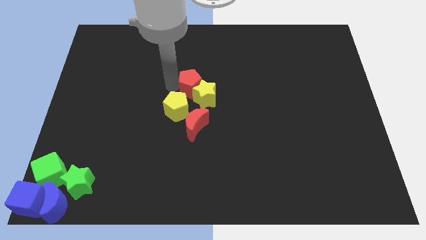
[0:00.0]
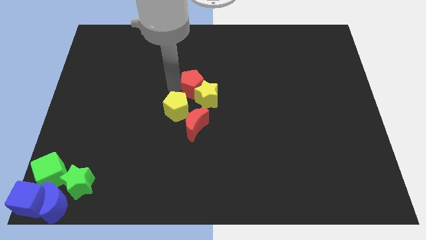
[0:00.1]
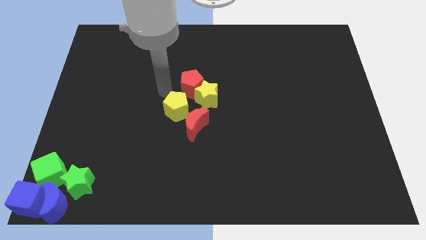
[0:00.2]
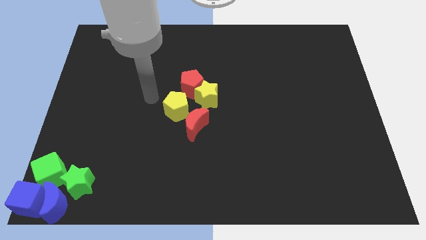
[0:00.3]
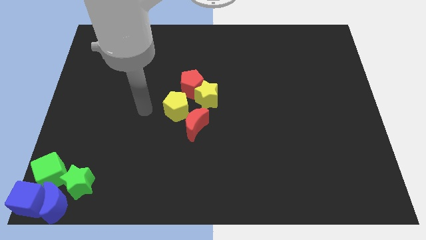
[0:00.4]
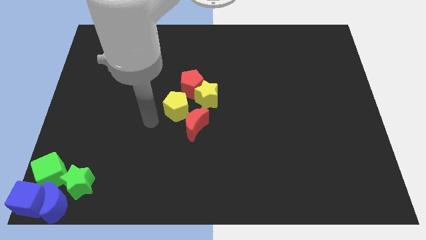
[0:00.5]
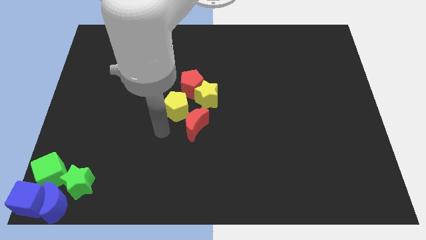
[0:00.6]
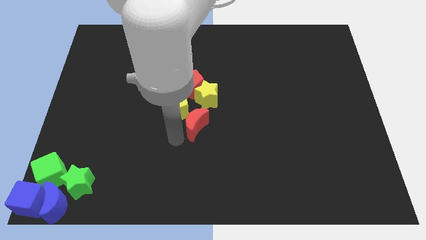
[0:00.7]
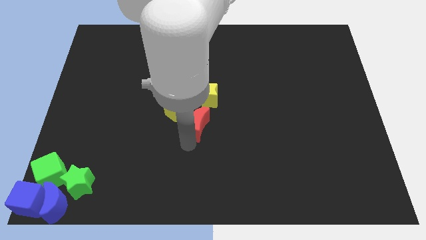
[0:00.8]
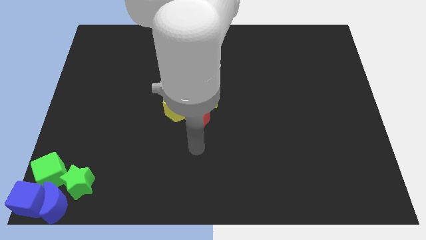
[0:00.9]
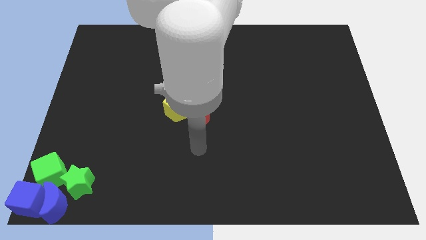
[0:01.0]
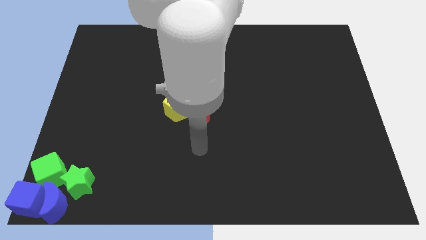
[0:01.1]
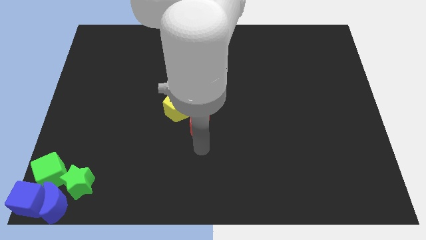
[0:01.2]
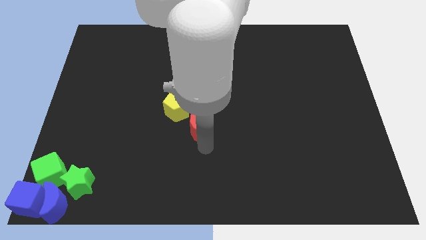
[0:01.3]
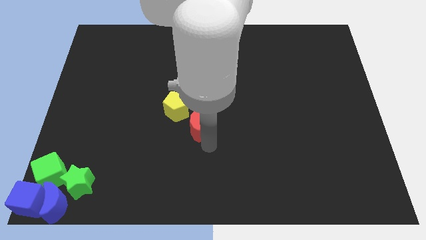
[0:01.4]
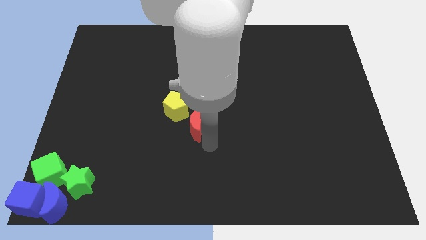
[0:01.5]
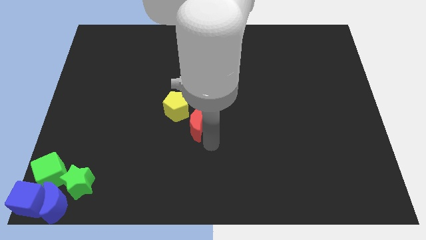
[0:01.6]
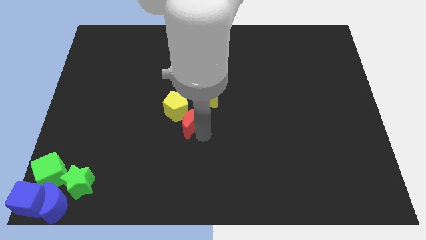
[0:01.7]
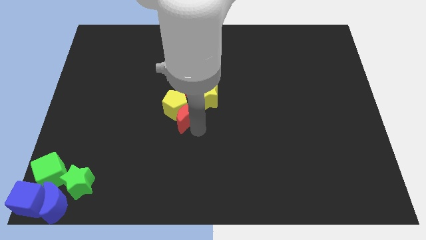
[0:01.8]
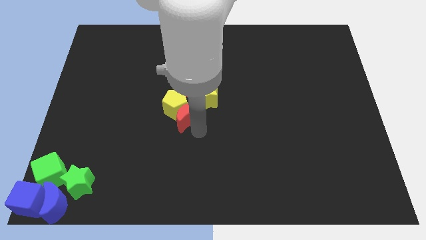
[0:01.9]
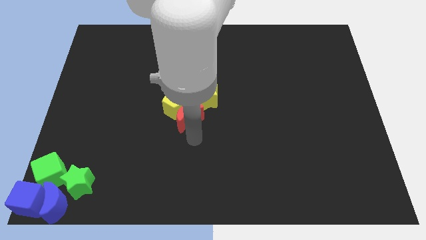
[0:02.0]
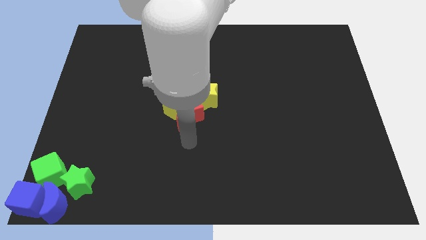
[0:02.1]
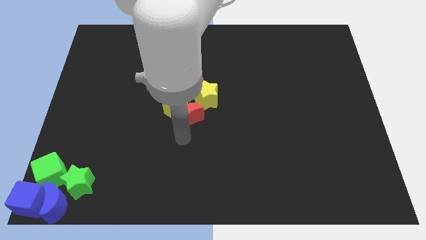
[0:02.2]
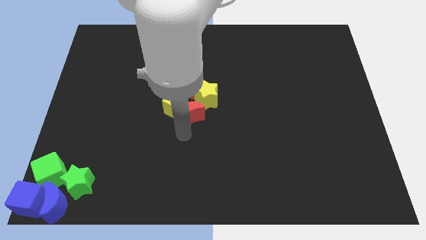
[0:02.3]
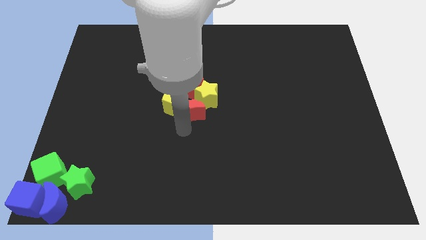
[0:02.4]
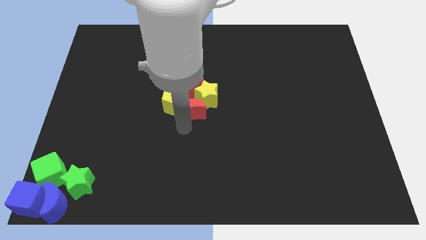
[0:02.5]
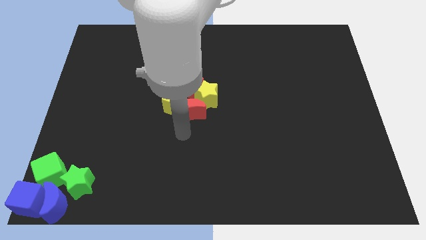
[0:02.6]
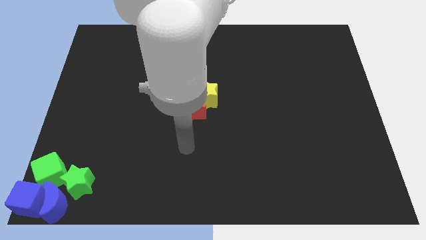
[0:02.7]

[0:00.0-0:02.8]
move group of blocks to the center

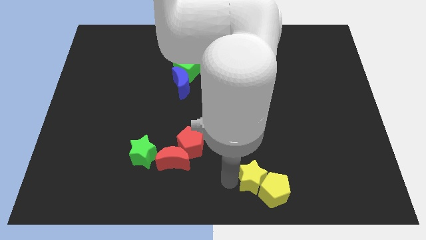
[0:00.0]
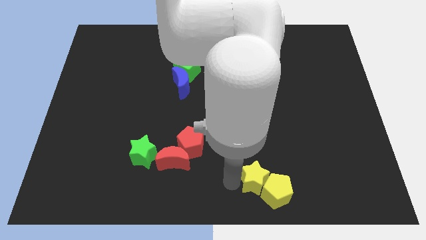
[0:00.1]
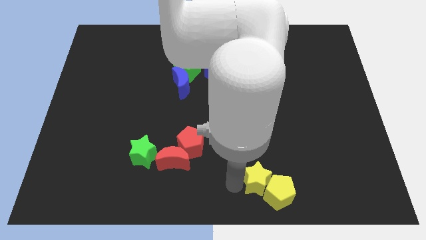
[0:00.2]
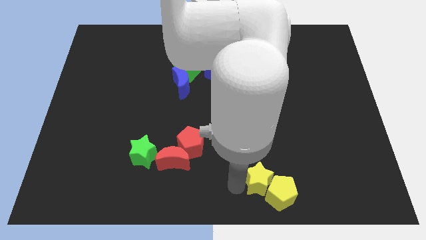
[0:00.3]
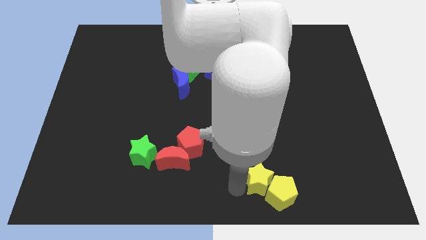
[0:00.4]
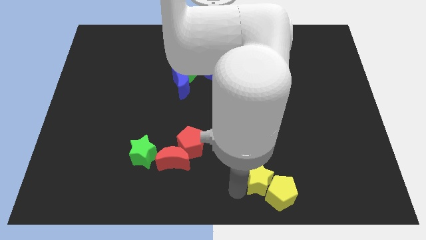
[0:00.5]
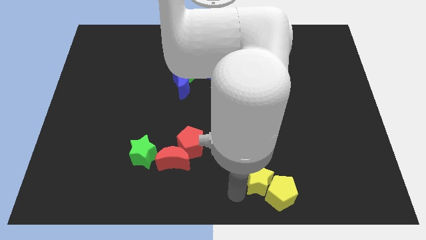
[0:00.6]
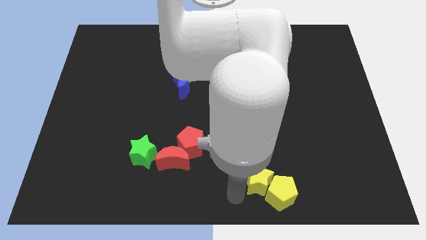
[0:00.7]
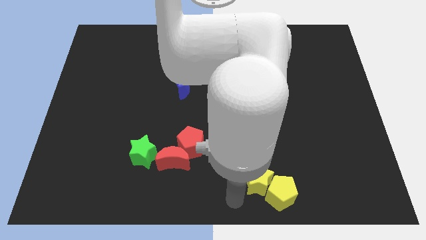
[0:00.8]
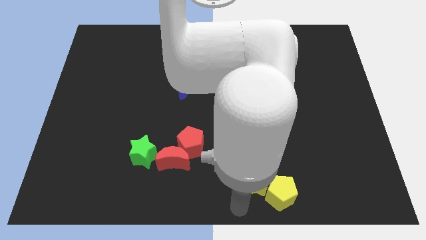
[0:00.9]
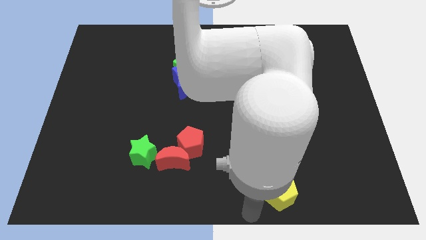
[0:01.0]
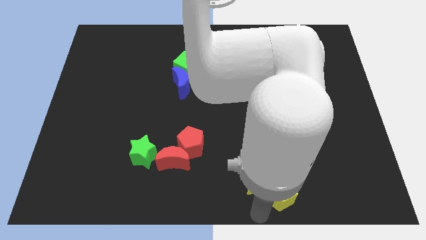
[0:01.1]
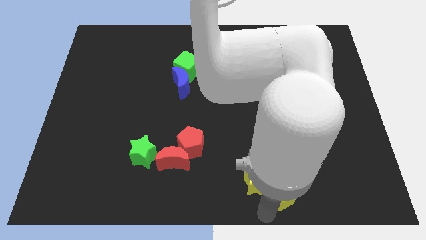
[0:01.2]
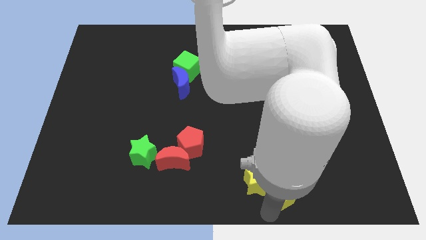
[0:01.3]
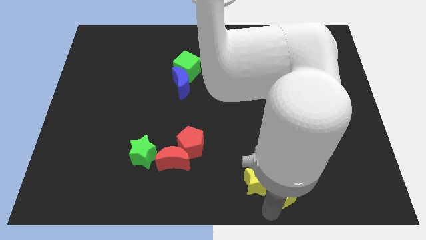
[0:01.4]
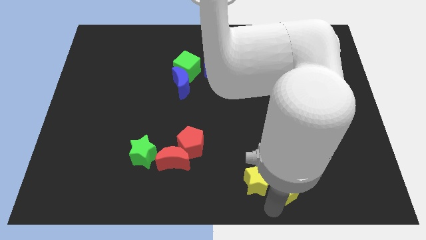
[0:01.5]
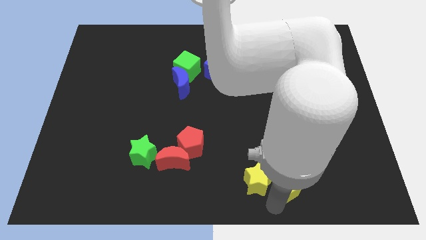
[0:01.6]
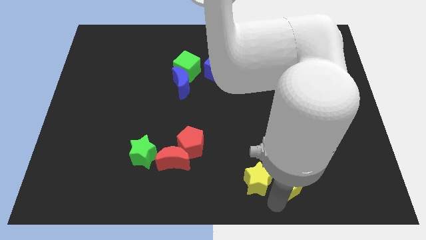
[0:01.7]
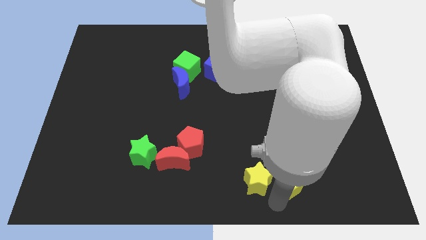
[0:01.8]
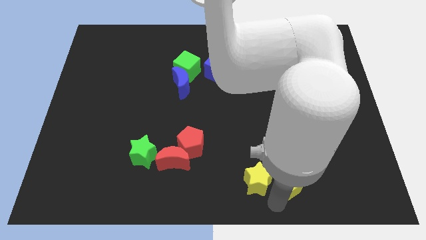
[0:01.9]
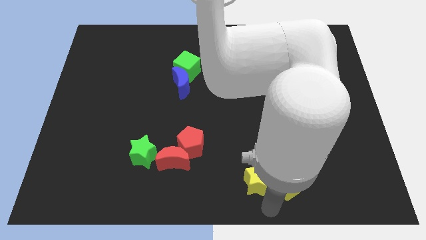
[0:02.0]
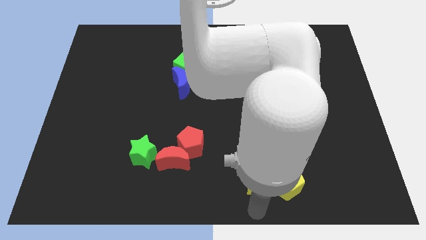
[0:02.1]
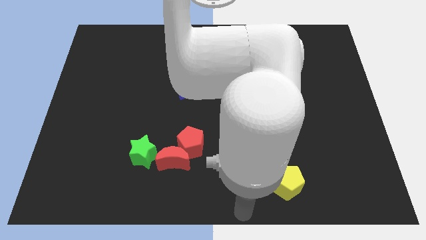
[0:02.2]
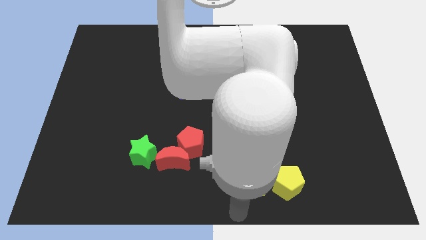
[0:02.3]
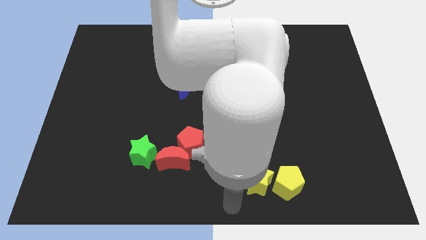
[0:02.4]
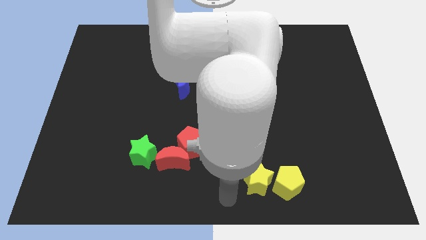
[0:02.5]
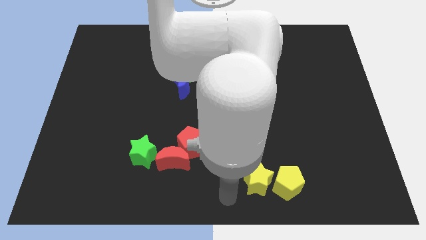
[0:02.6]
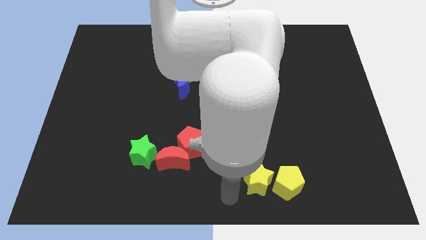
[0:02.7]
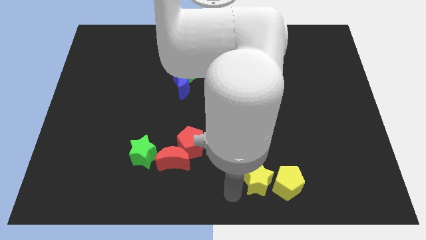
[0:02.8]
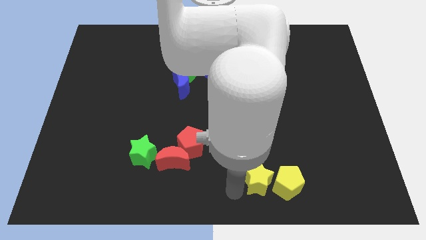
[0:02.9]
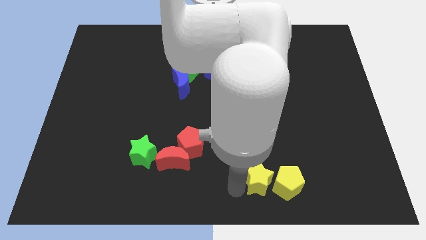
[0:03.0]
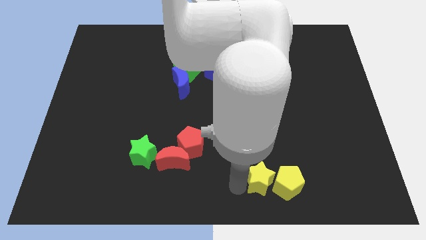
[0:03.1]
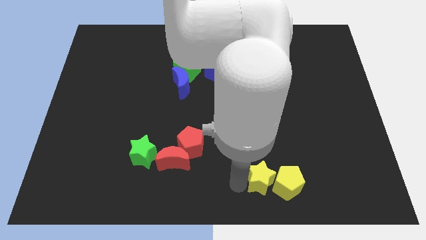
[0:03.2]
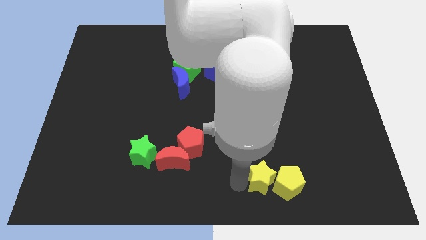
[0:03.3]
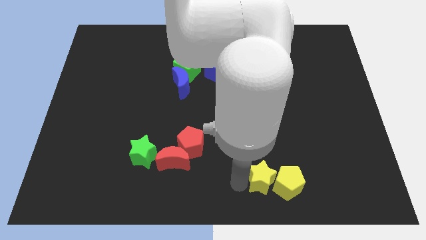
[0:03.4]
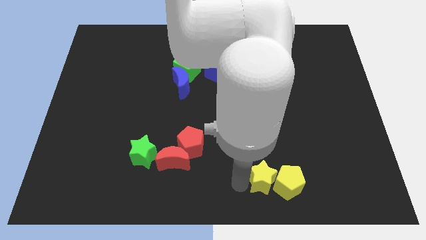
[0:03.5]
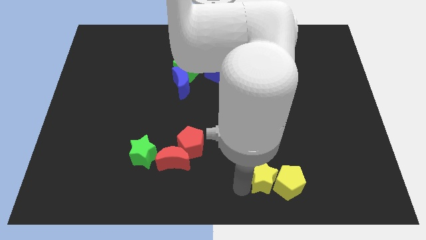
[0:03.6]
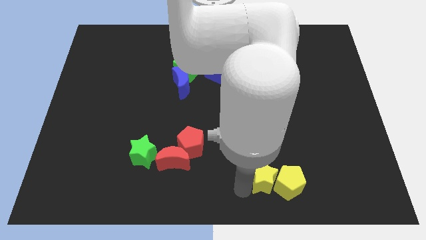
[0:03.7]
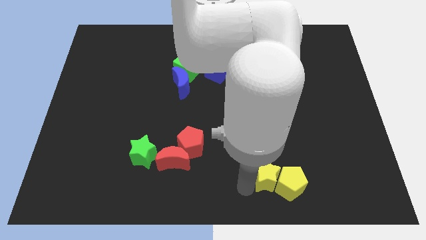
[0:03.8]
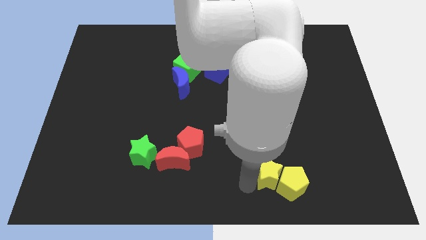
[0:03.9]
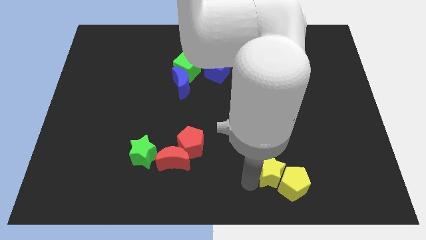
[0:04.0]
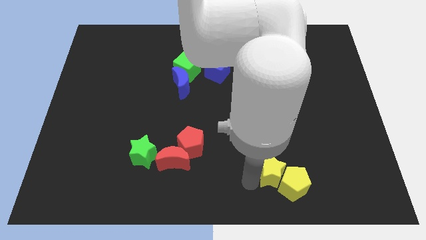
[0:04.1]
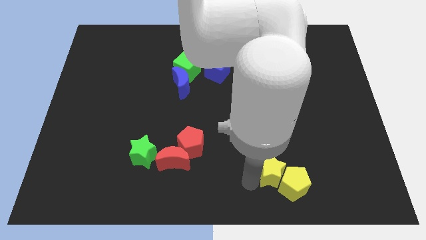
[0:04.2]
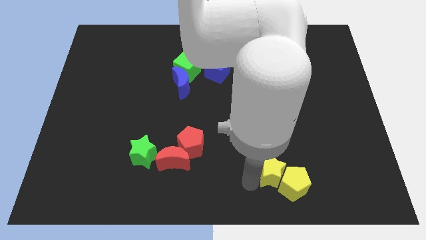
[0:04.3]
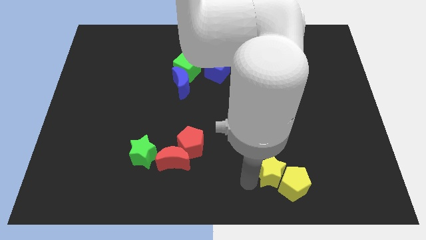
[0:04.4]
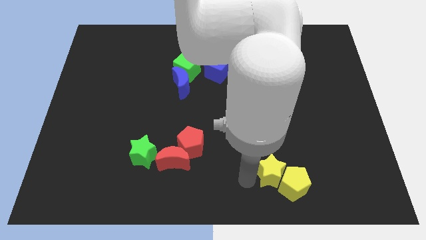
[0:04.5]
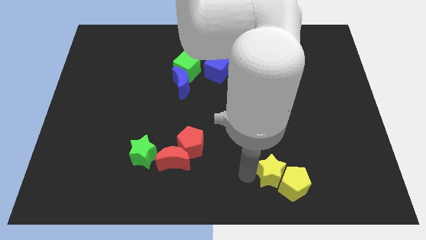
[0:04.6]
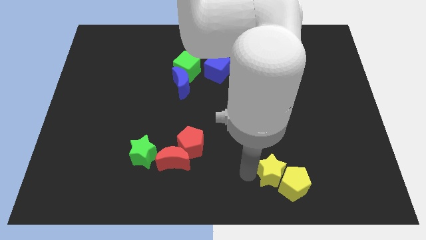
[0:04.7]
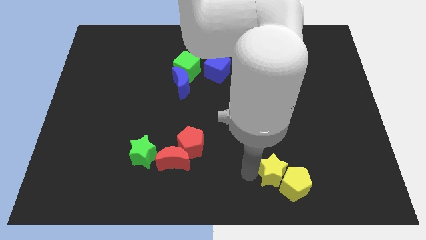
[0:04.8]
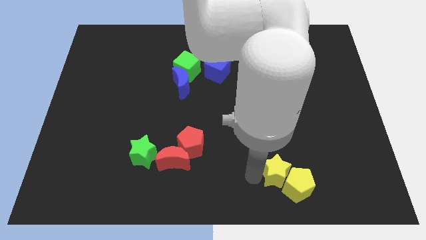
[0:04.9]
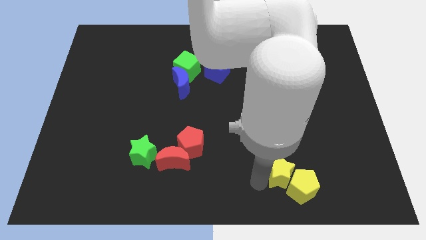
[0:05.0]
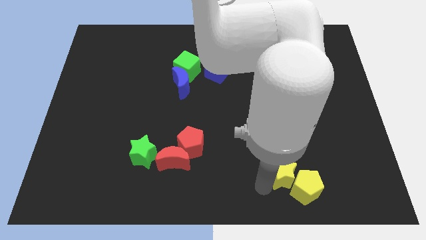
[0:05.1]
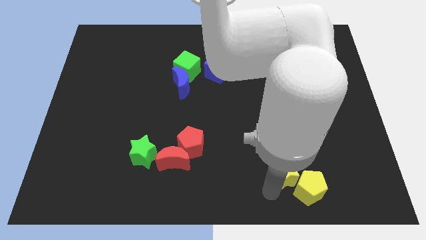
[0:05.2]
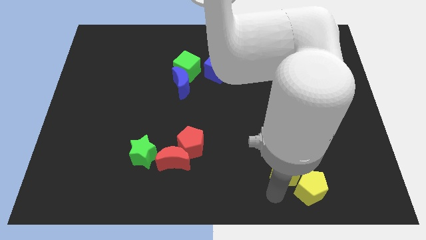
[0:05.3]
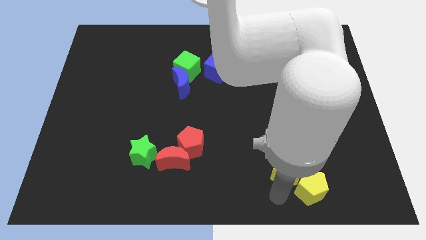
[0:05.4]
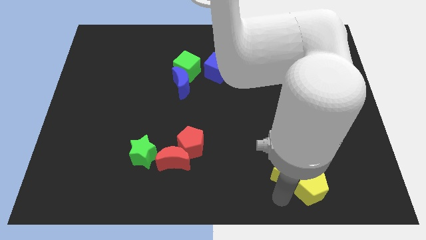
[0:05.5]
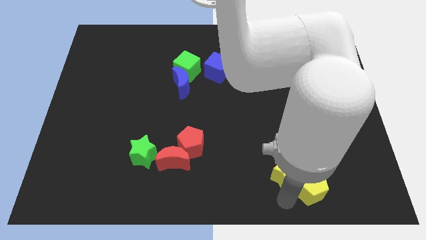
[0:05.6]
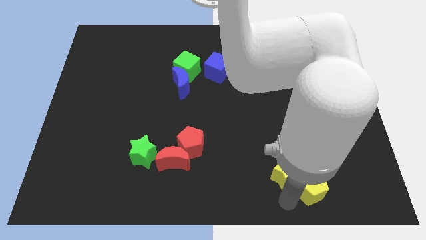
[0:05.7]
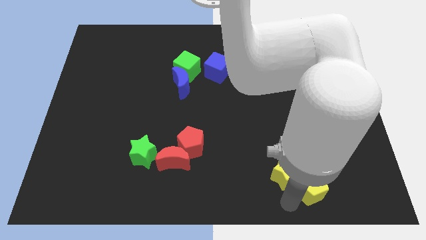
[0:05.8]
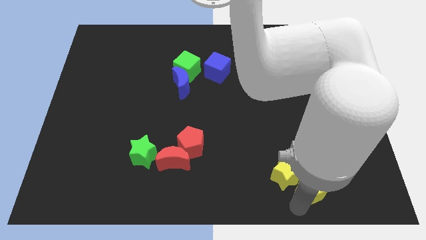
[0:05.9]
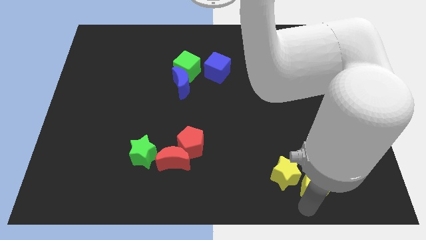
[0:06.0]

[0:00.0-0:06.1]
move the yellow blocks towards the bottom right
